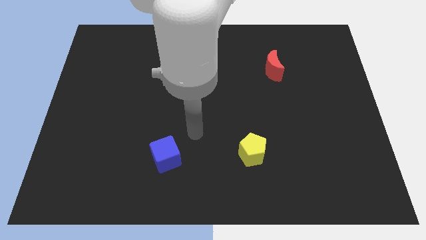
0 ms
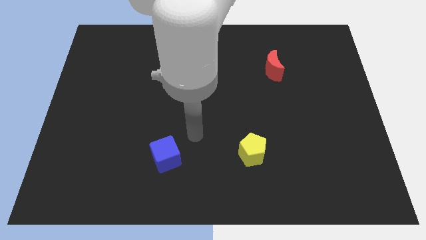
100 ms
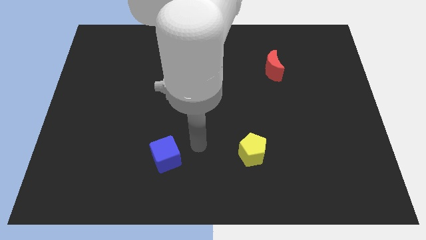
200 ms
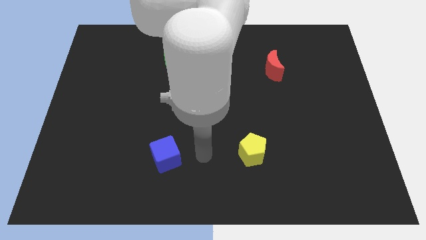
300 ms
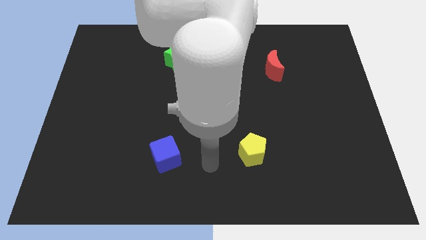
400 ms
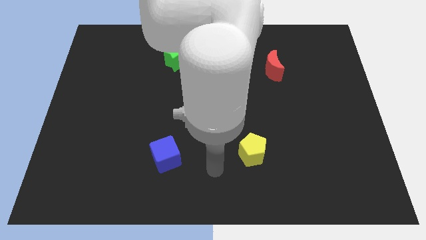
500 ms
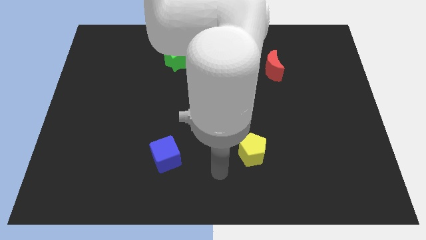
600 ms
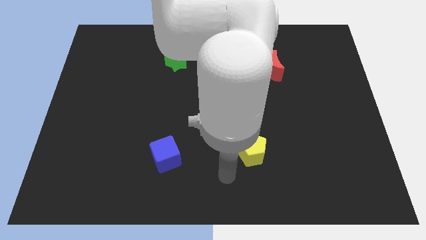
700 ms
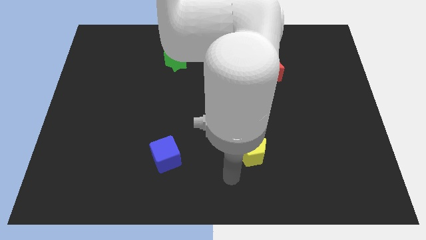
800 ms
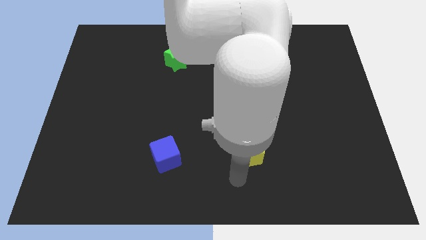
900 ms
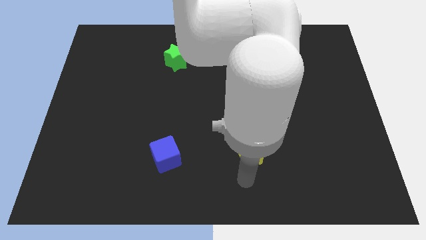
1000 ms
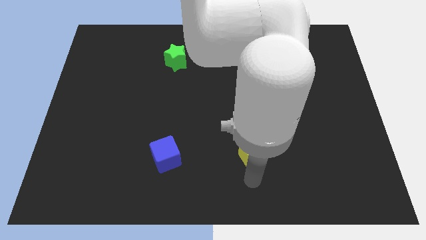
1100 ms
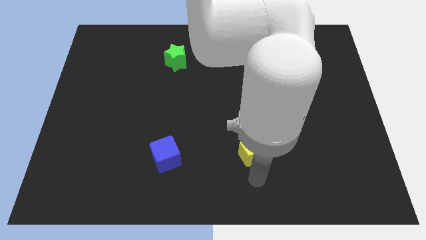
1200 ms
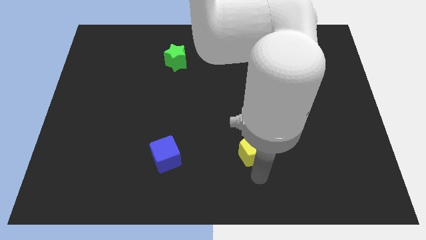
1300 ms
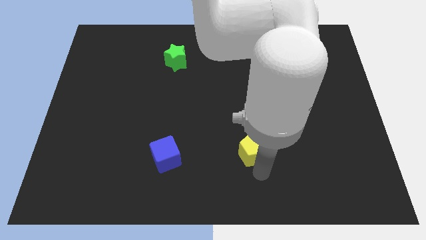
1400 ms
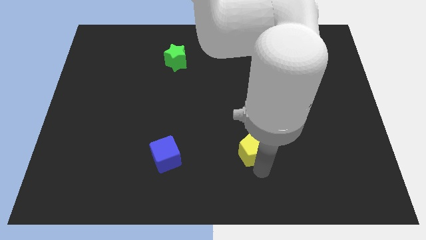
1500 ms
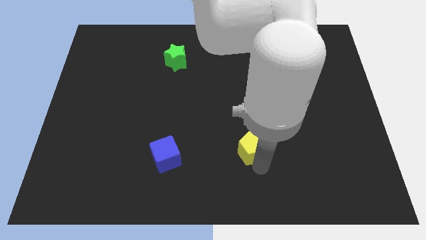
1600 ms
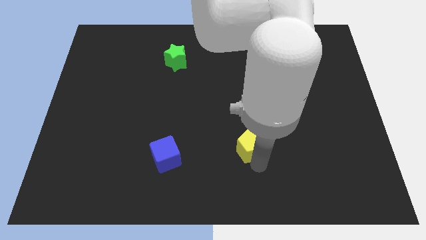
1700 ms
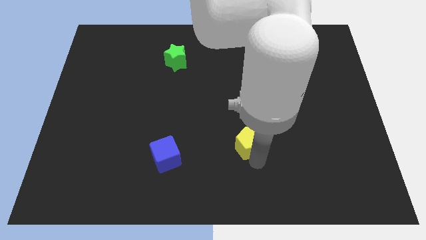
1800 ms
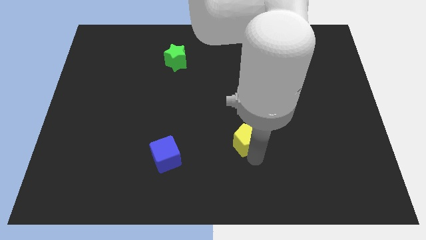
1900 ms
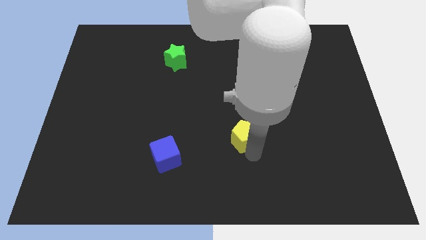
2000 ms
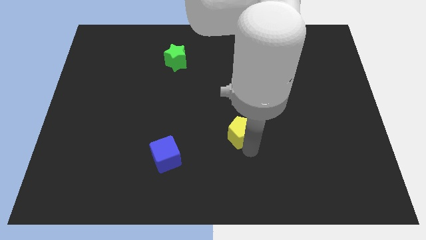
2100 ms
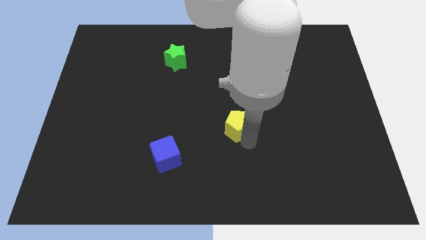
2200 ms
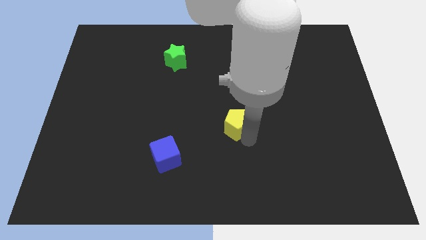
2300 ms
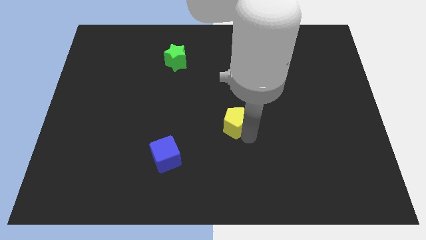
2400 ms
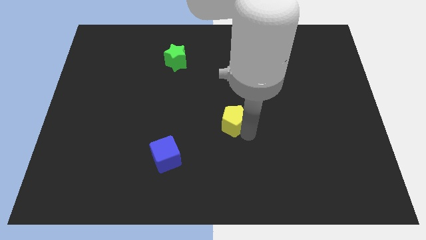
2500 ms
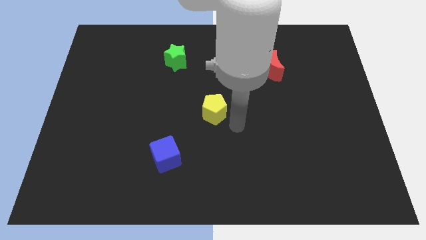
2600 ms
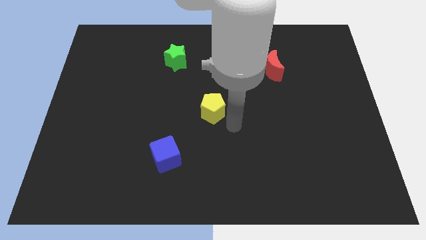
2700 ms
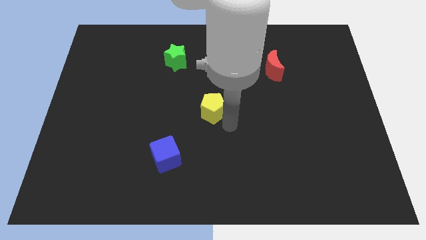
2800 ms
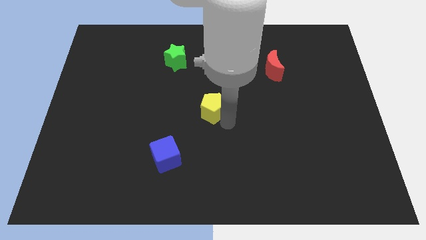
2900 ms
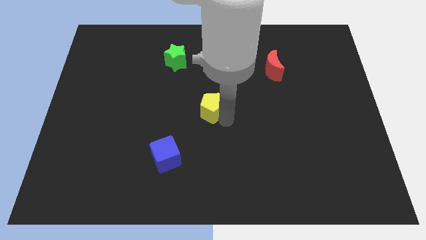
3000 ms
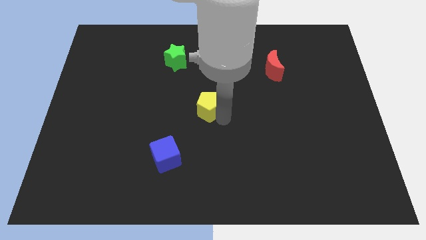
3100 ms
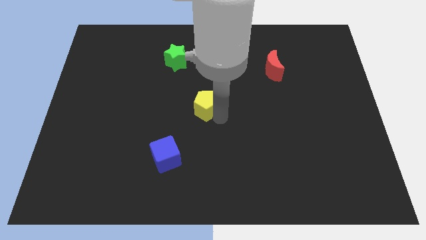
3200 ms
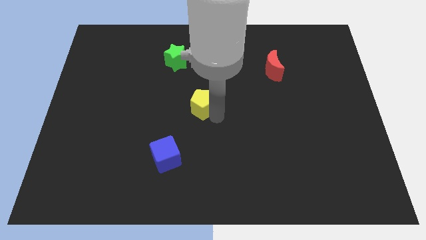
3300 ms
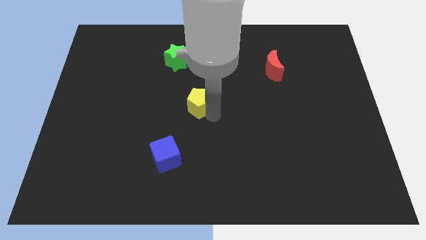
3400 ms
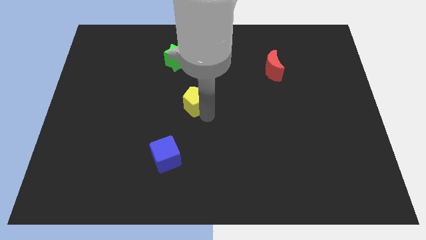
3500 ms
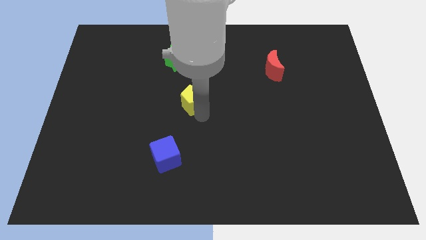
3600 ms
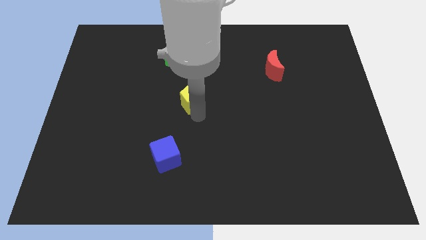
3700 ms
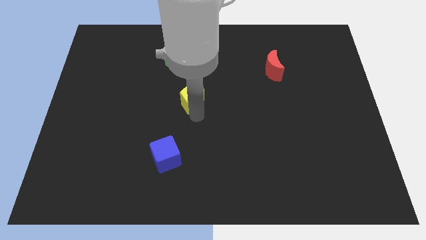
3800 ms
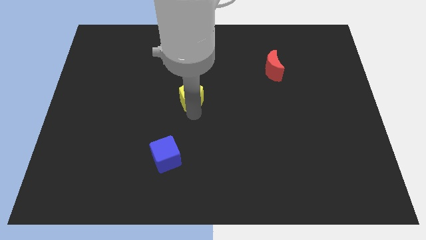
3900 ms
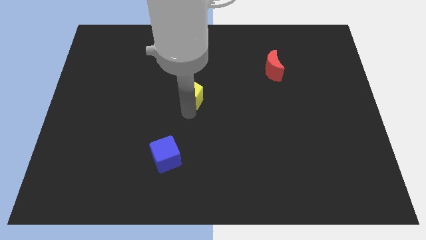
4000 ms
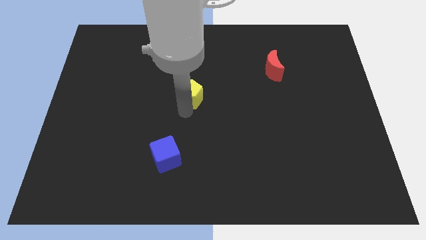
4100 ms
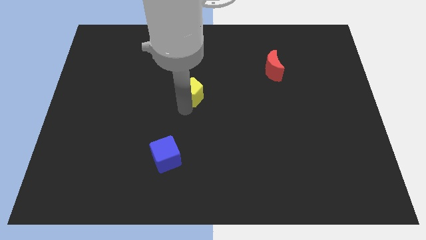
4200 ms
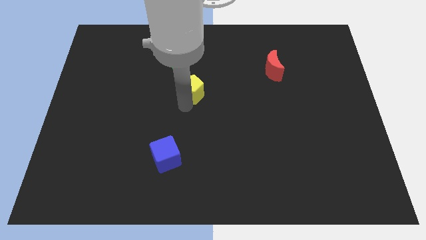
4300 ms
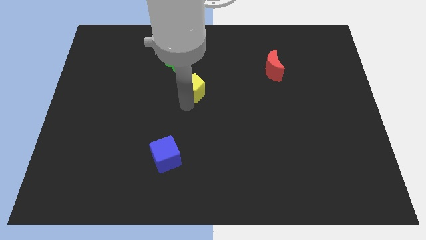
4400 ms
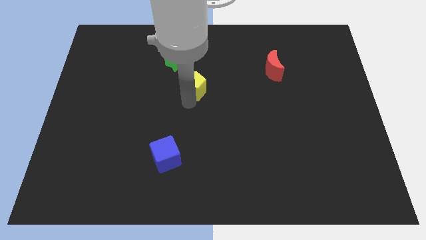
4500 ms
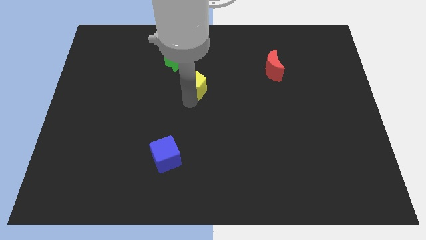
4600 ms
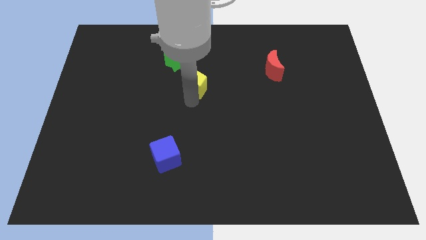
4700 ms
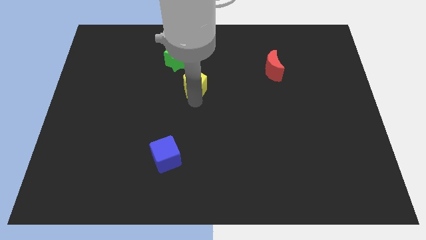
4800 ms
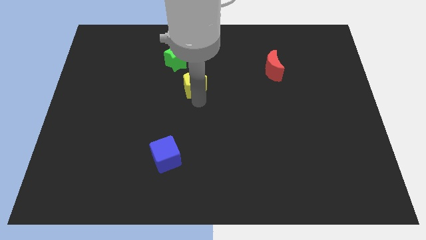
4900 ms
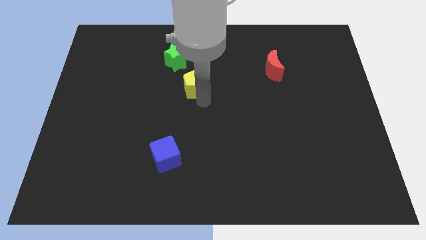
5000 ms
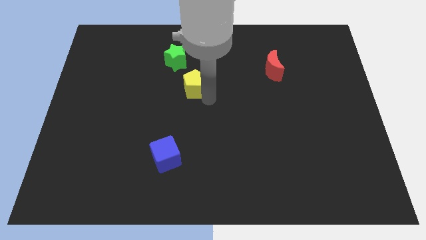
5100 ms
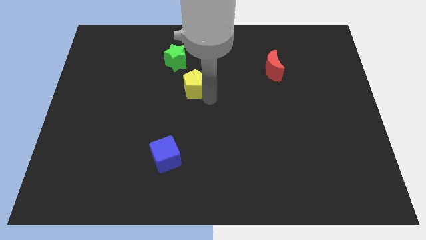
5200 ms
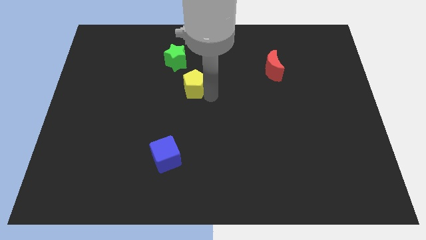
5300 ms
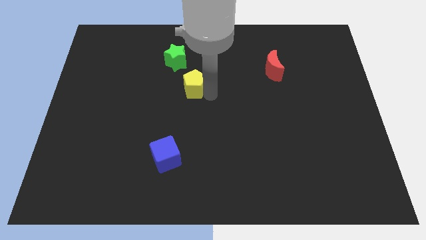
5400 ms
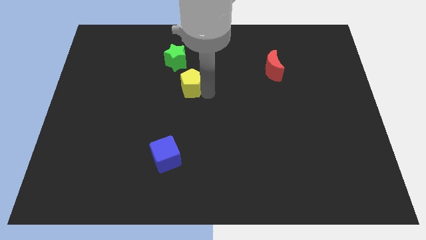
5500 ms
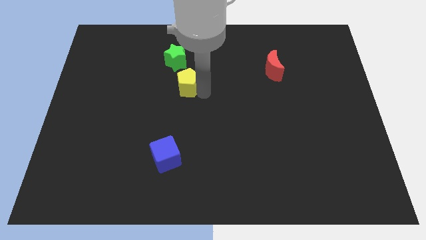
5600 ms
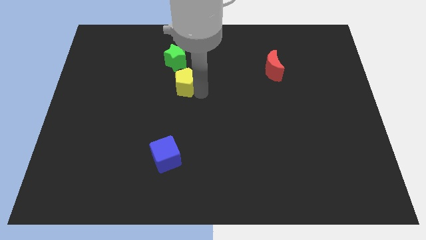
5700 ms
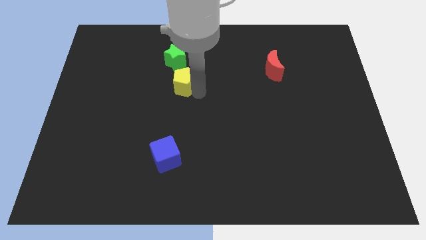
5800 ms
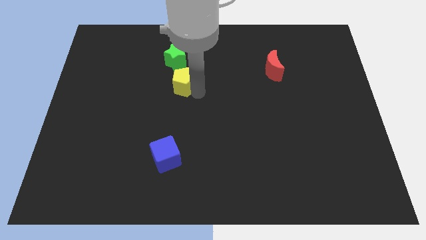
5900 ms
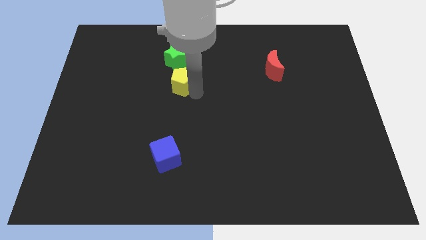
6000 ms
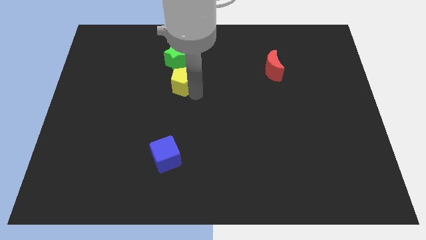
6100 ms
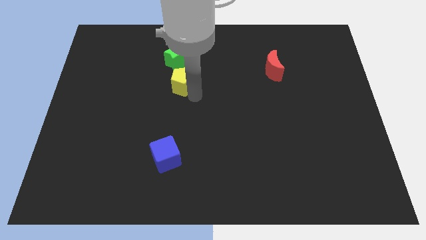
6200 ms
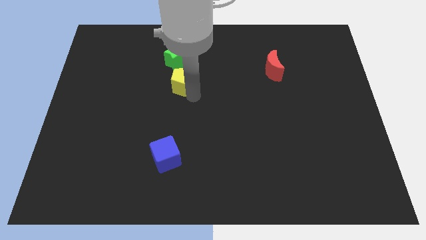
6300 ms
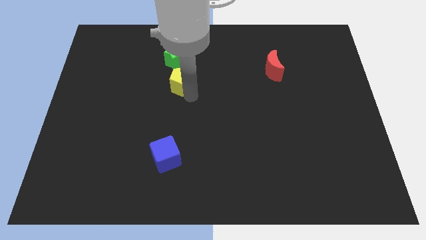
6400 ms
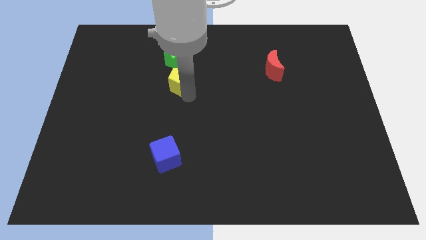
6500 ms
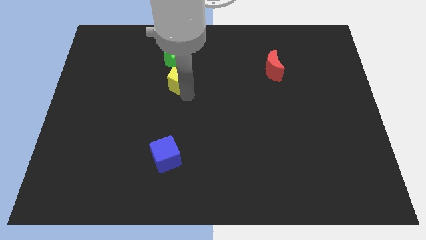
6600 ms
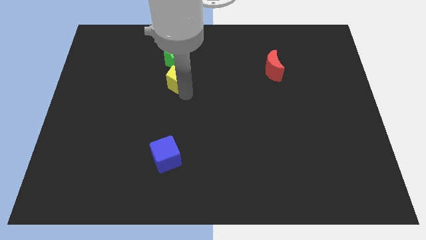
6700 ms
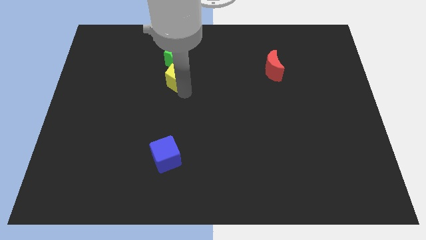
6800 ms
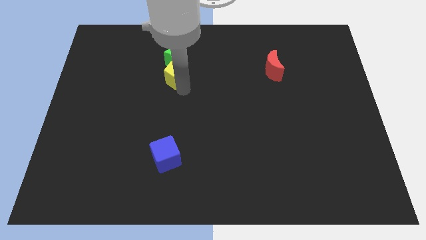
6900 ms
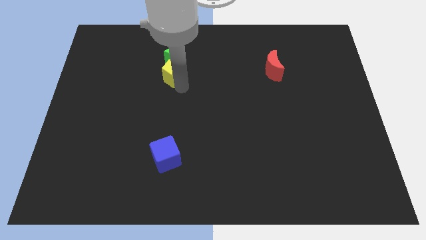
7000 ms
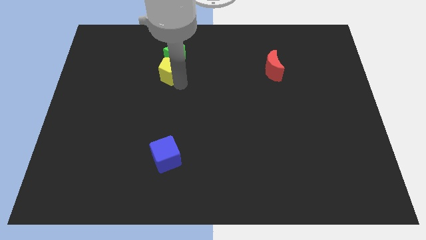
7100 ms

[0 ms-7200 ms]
put the yellow block towards the star

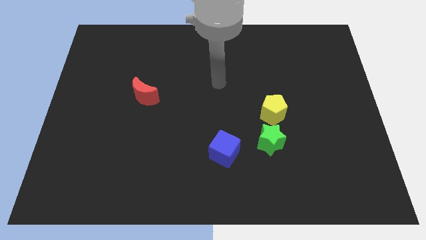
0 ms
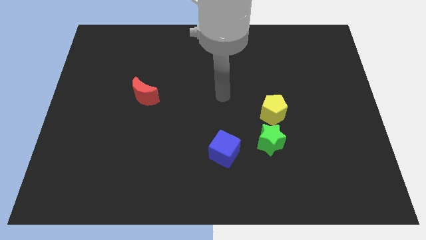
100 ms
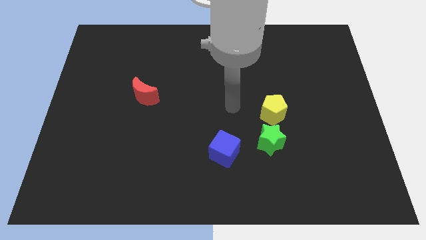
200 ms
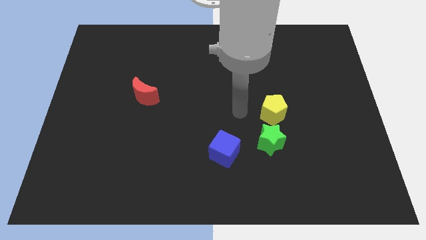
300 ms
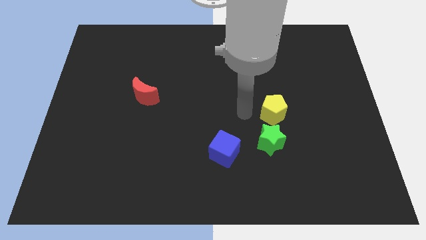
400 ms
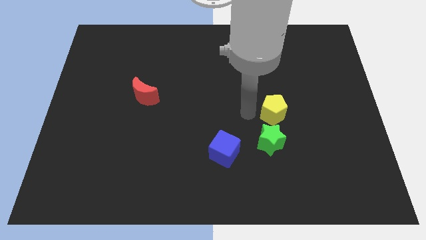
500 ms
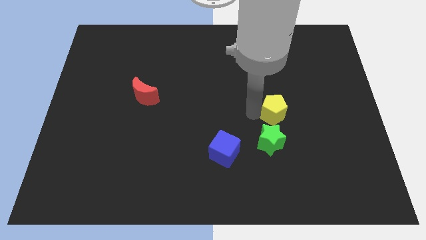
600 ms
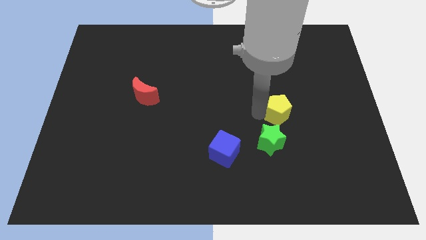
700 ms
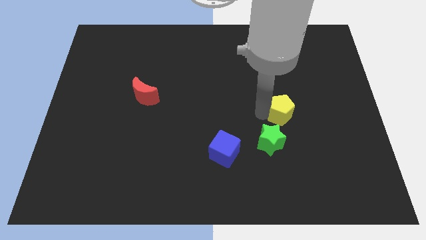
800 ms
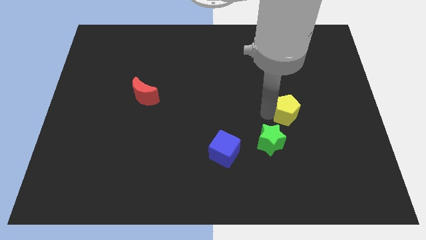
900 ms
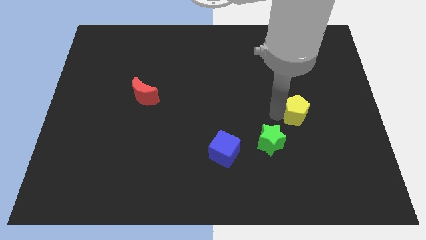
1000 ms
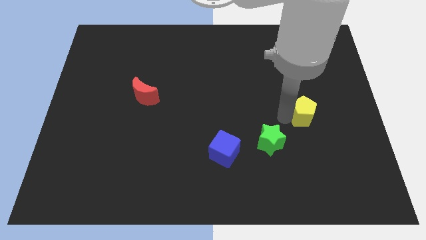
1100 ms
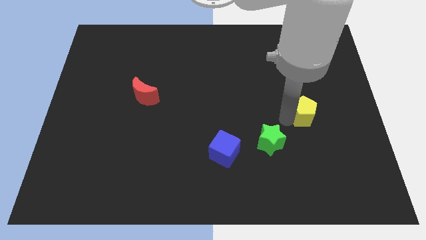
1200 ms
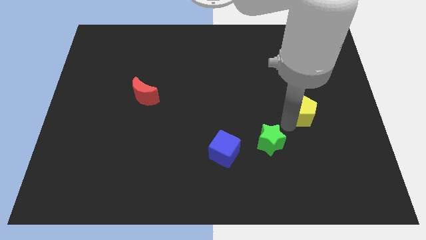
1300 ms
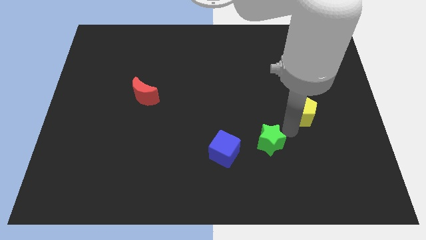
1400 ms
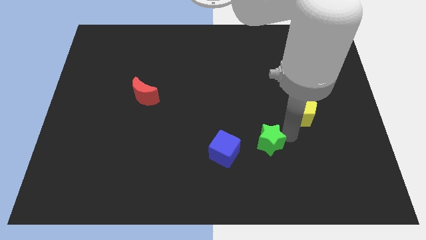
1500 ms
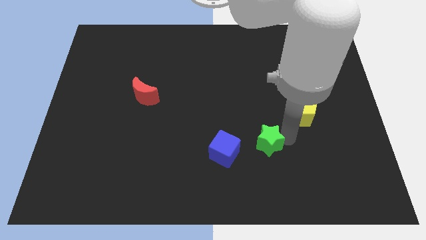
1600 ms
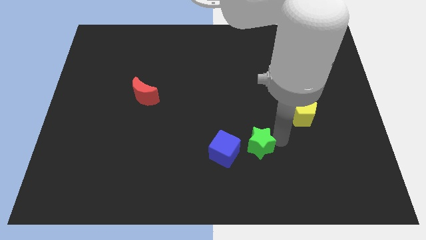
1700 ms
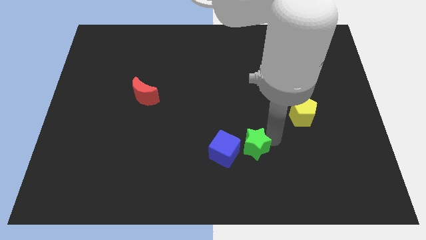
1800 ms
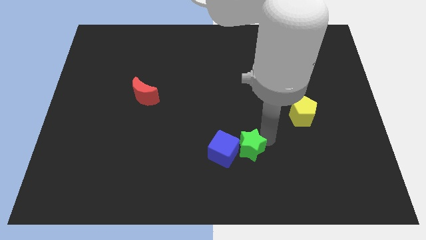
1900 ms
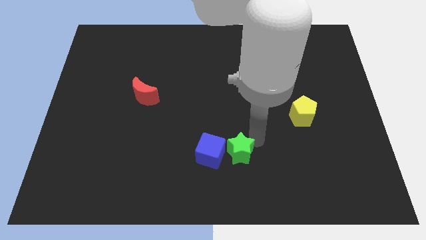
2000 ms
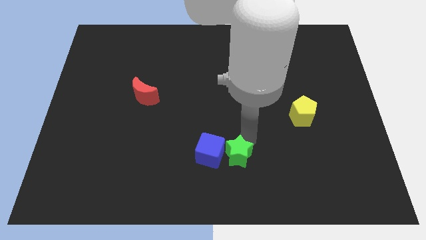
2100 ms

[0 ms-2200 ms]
move the green star to the blue cube
